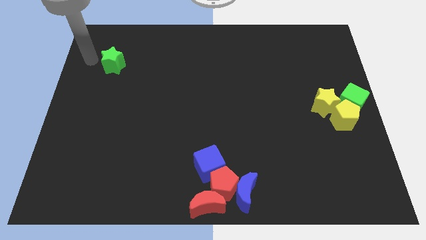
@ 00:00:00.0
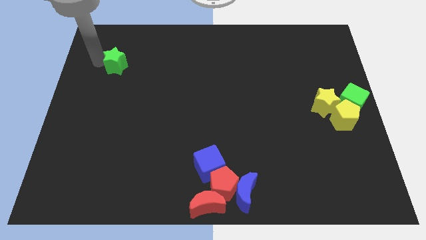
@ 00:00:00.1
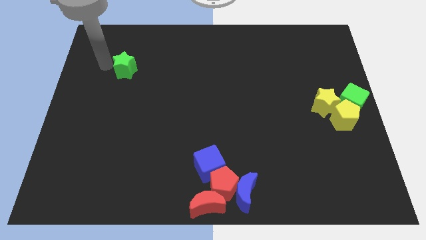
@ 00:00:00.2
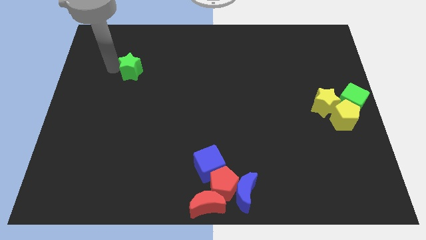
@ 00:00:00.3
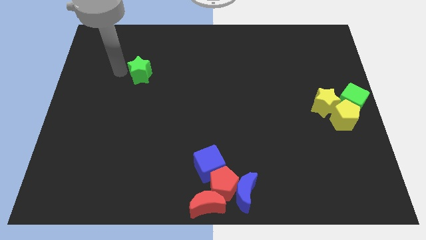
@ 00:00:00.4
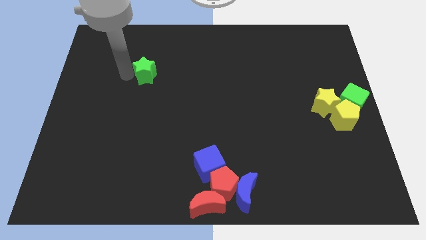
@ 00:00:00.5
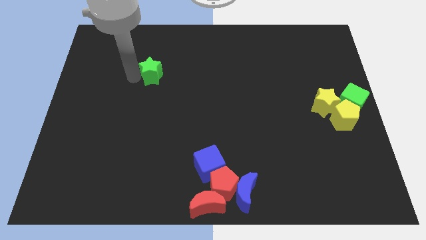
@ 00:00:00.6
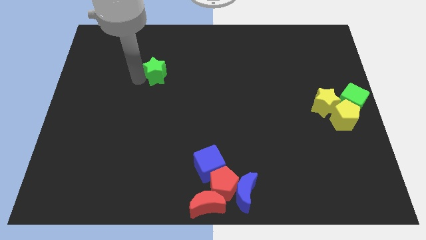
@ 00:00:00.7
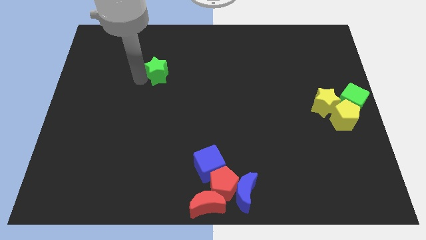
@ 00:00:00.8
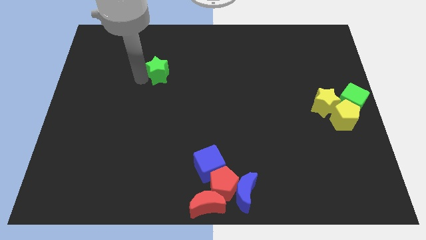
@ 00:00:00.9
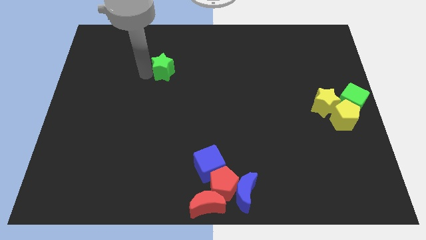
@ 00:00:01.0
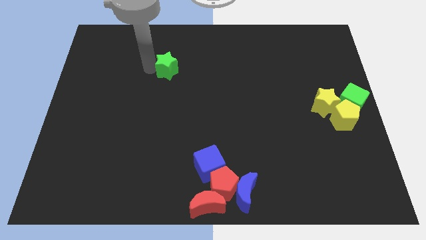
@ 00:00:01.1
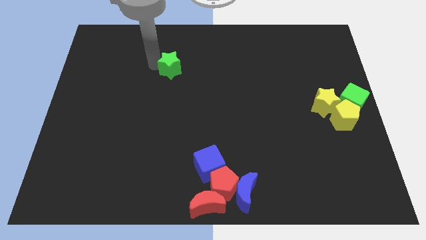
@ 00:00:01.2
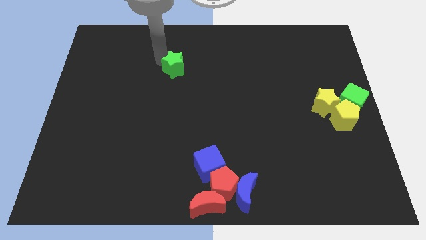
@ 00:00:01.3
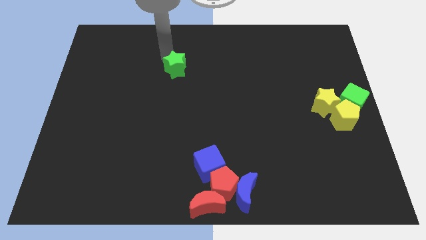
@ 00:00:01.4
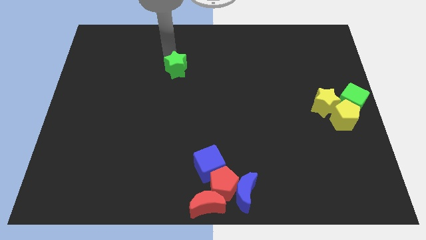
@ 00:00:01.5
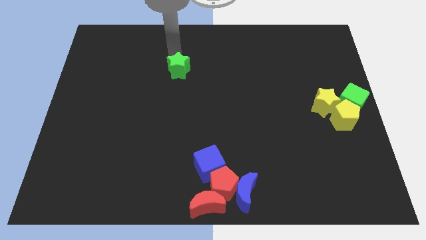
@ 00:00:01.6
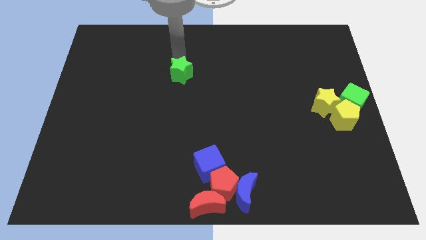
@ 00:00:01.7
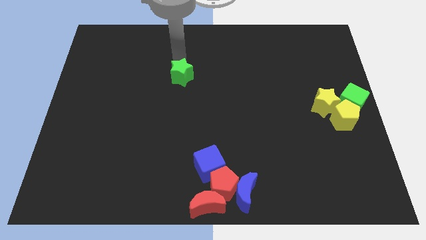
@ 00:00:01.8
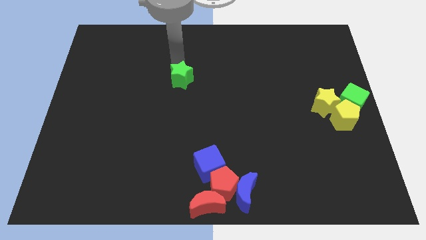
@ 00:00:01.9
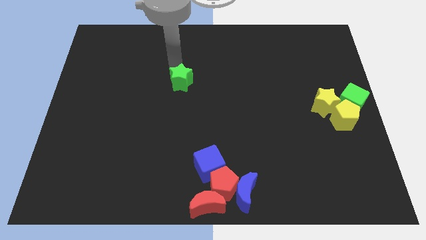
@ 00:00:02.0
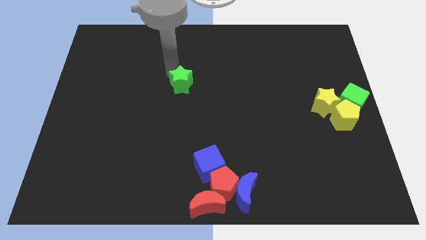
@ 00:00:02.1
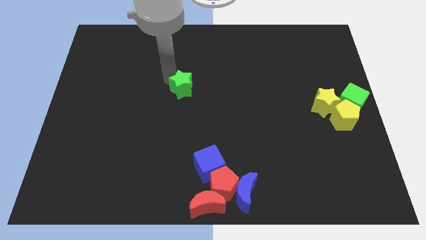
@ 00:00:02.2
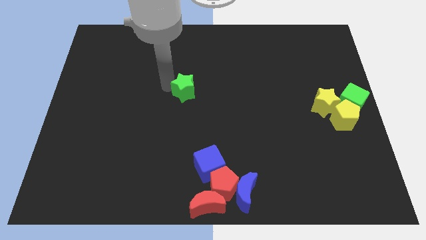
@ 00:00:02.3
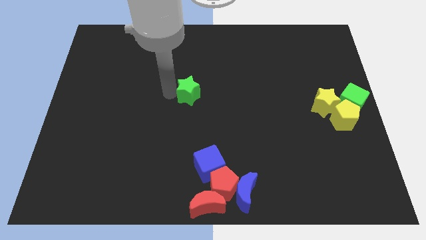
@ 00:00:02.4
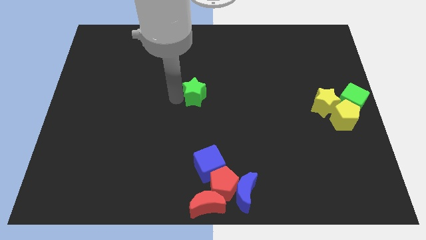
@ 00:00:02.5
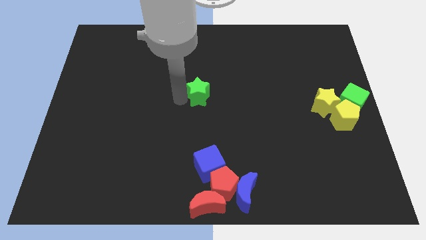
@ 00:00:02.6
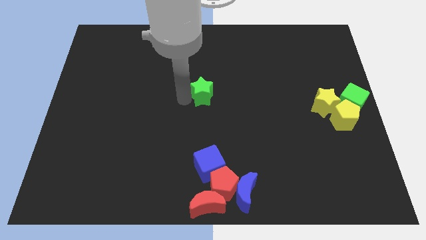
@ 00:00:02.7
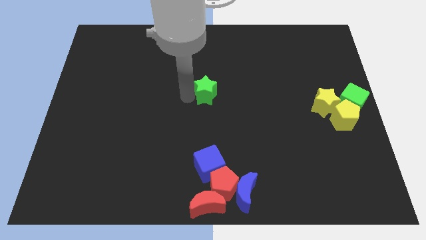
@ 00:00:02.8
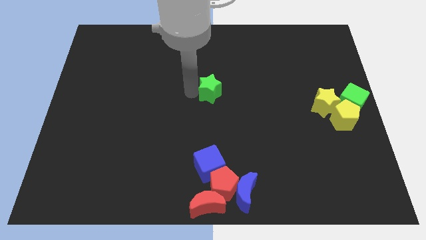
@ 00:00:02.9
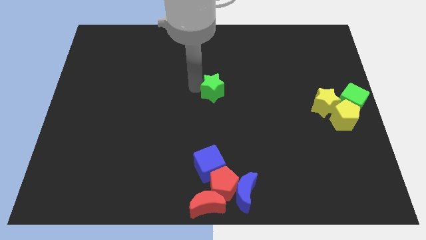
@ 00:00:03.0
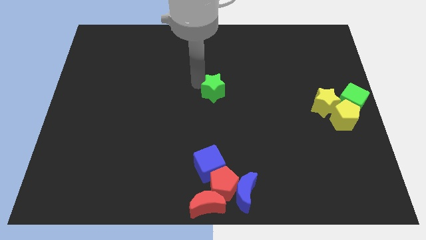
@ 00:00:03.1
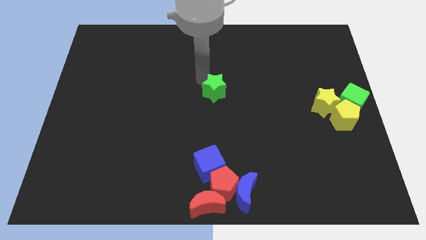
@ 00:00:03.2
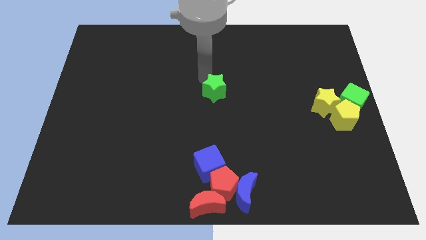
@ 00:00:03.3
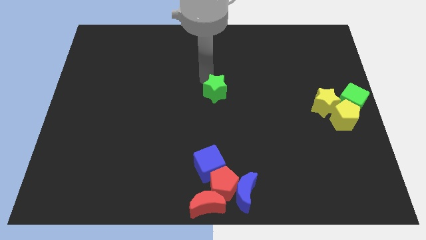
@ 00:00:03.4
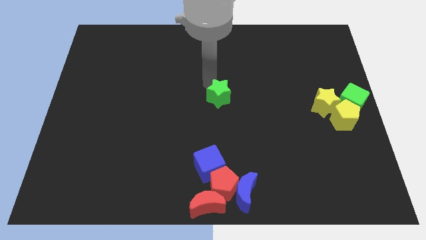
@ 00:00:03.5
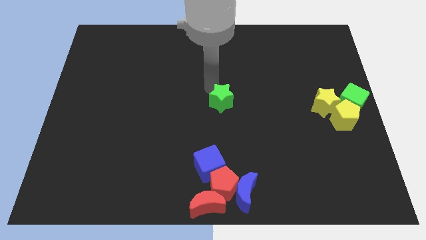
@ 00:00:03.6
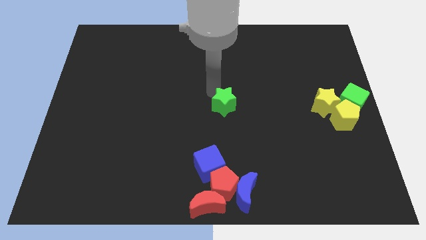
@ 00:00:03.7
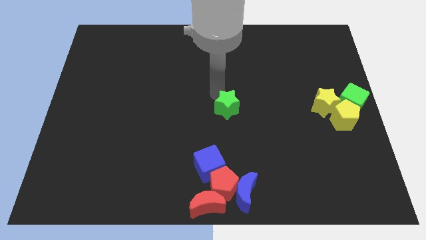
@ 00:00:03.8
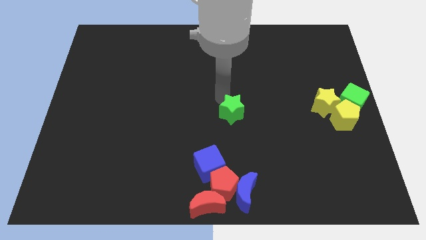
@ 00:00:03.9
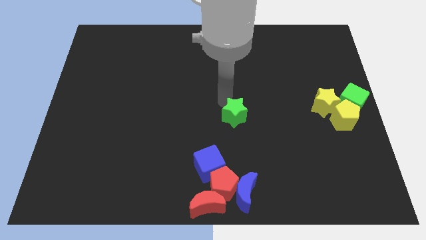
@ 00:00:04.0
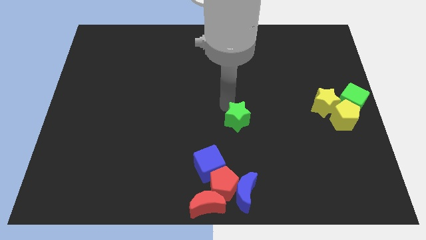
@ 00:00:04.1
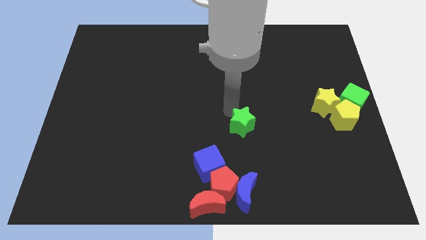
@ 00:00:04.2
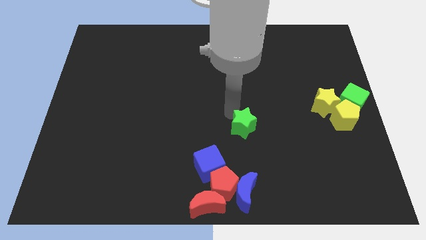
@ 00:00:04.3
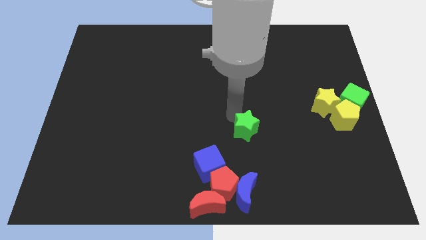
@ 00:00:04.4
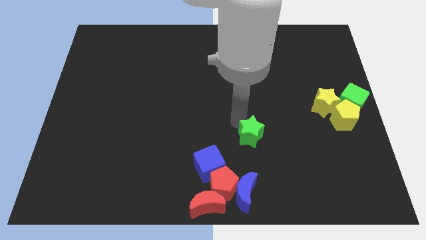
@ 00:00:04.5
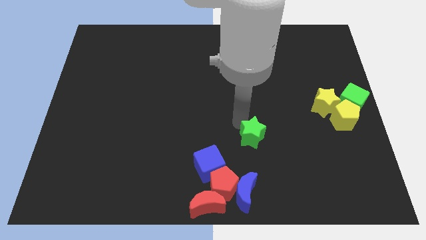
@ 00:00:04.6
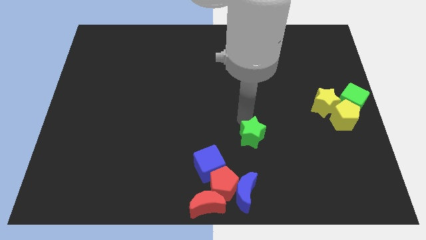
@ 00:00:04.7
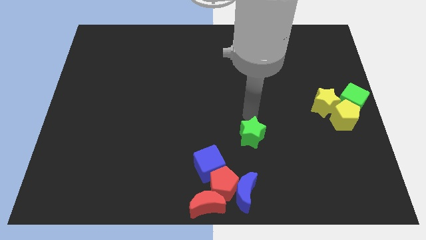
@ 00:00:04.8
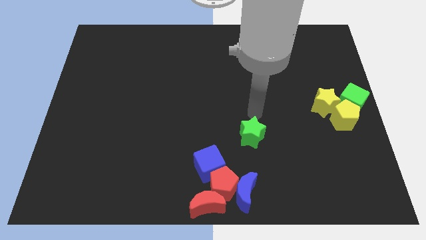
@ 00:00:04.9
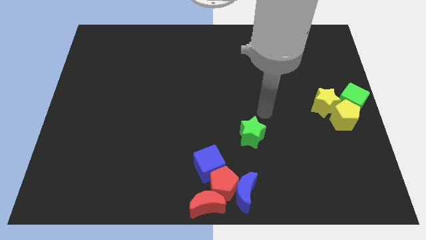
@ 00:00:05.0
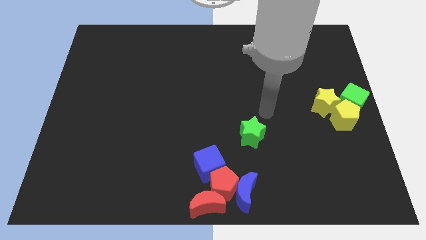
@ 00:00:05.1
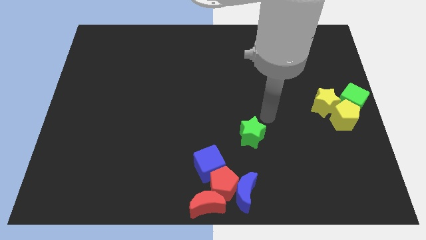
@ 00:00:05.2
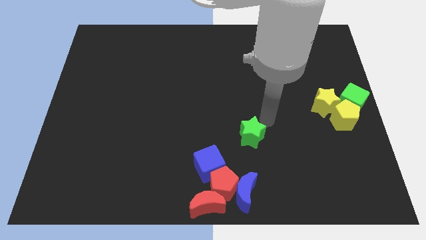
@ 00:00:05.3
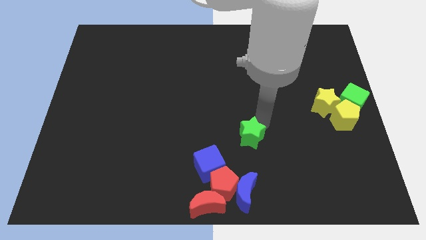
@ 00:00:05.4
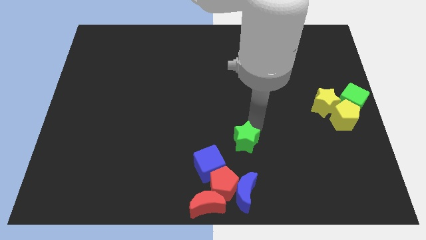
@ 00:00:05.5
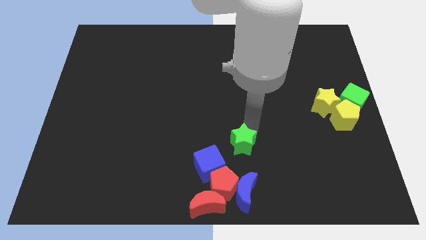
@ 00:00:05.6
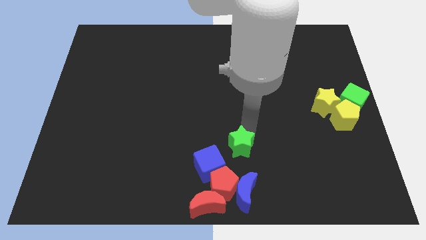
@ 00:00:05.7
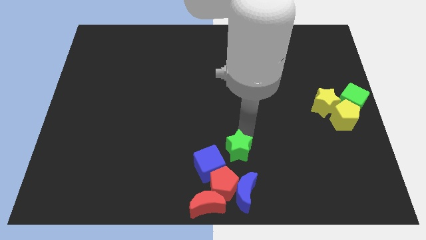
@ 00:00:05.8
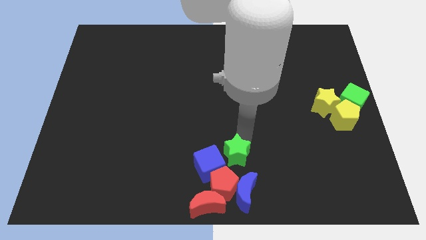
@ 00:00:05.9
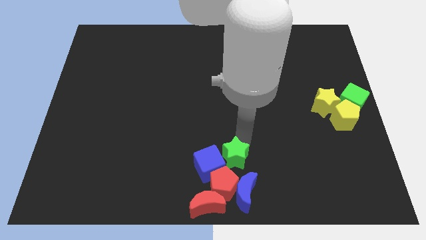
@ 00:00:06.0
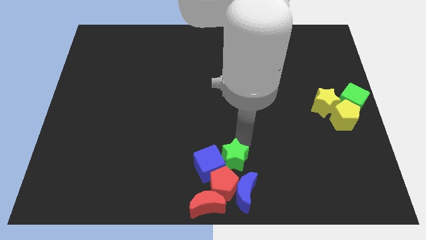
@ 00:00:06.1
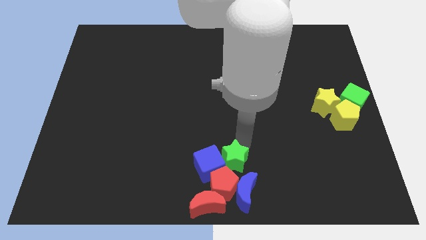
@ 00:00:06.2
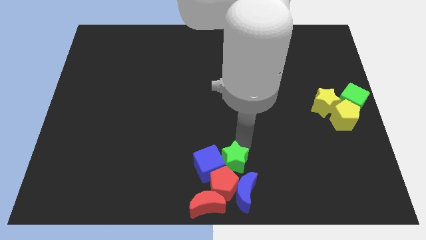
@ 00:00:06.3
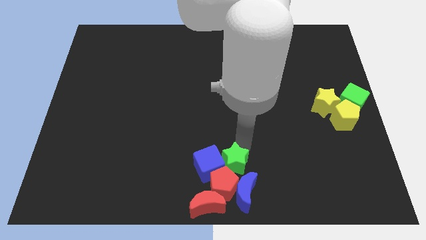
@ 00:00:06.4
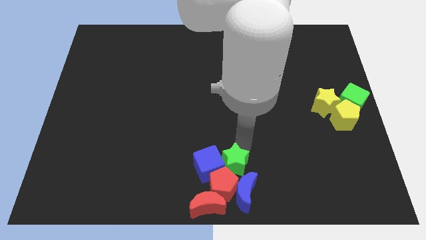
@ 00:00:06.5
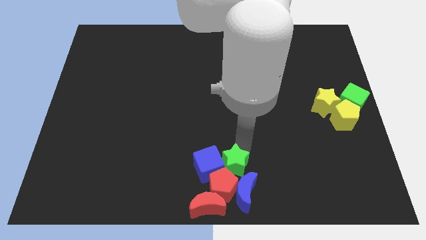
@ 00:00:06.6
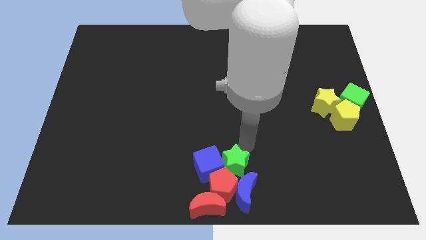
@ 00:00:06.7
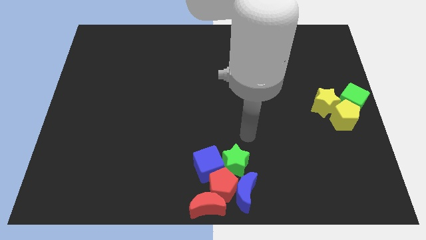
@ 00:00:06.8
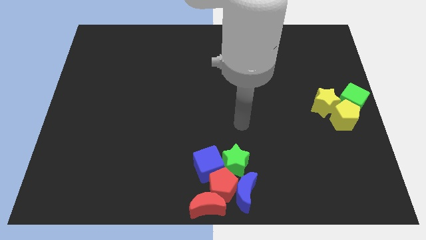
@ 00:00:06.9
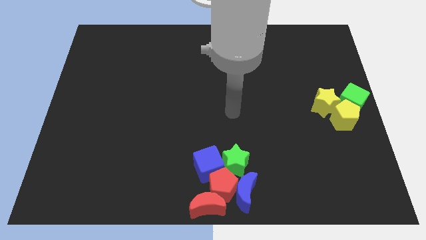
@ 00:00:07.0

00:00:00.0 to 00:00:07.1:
push the green star into the group of blocks

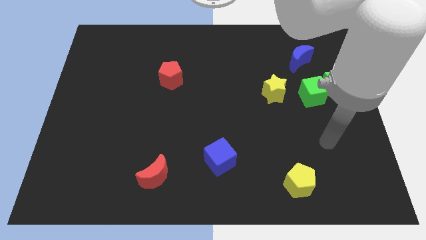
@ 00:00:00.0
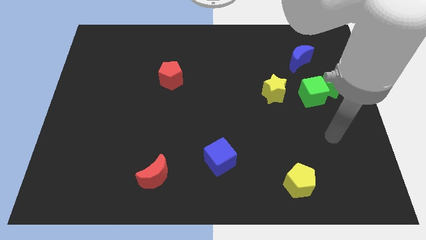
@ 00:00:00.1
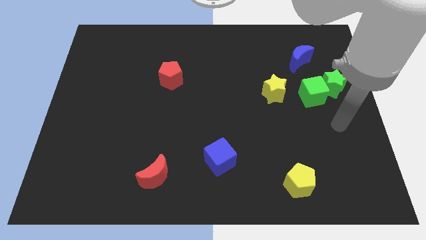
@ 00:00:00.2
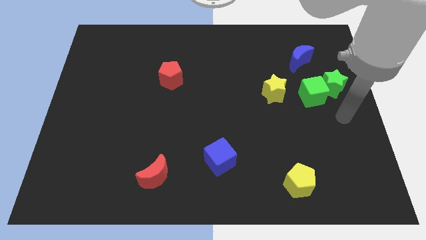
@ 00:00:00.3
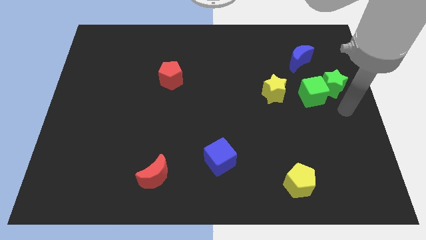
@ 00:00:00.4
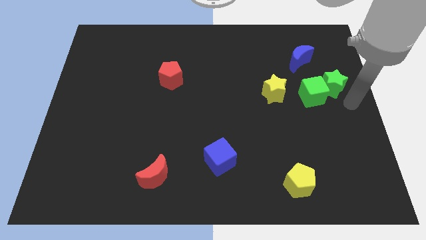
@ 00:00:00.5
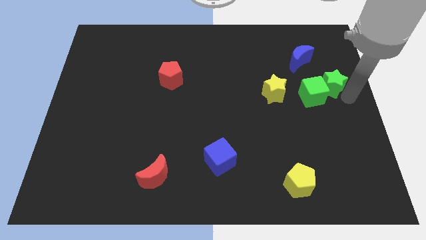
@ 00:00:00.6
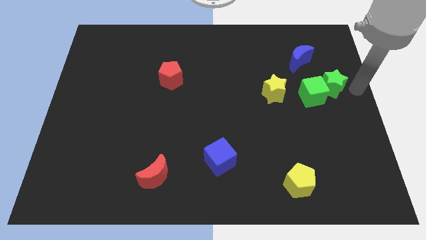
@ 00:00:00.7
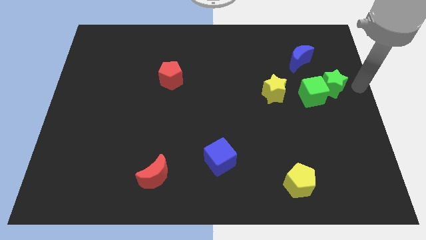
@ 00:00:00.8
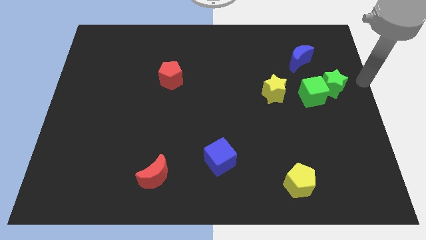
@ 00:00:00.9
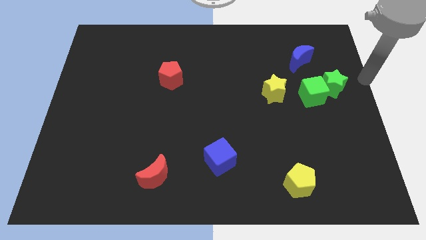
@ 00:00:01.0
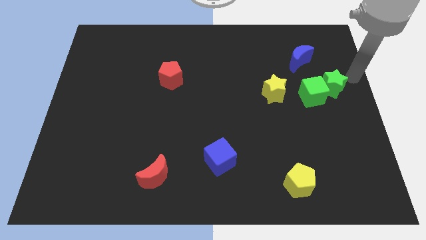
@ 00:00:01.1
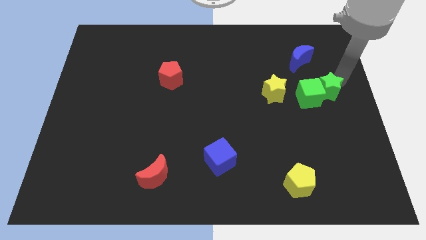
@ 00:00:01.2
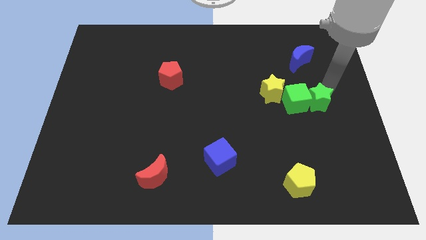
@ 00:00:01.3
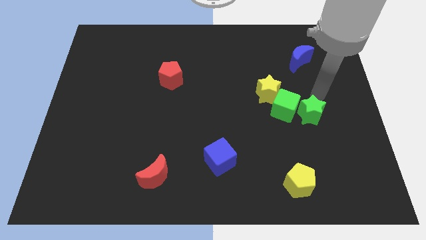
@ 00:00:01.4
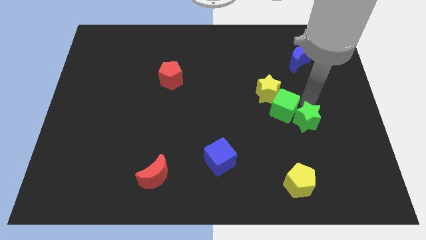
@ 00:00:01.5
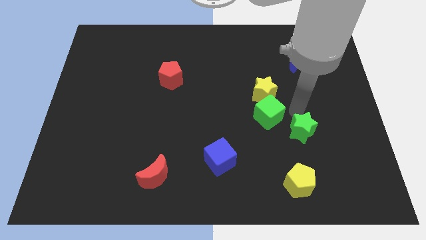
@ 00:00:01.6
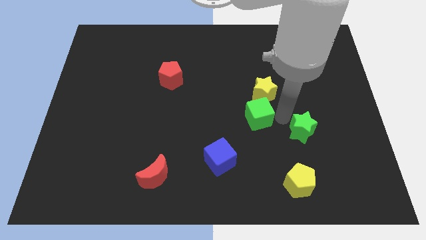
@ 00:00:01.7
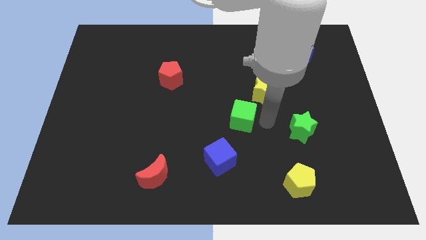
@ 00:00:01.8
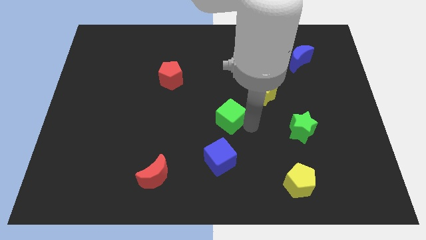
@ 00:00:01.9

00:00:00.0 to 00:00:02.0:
move the green star above the yellow pentagon
